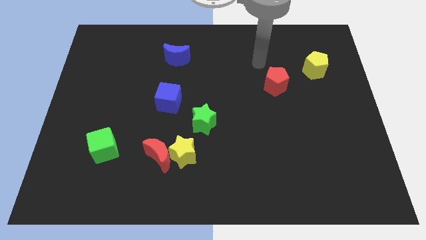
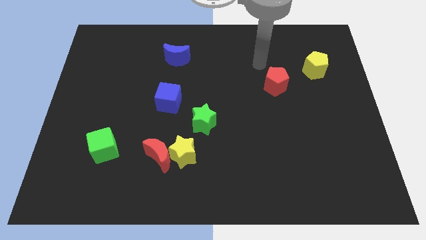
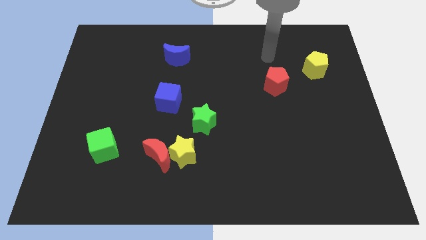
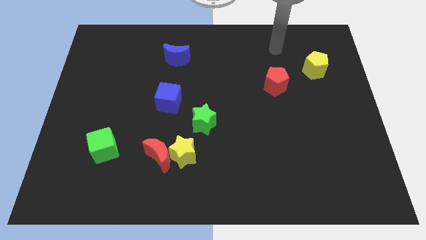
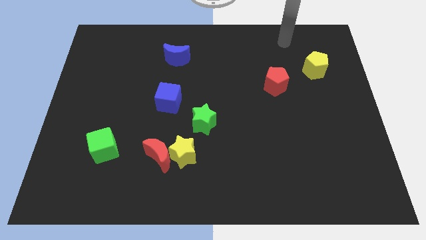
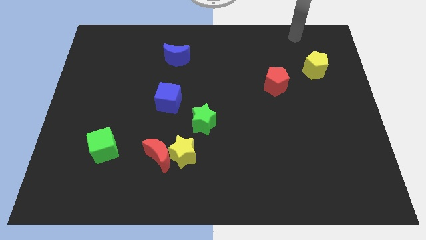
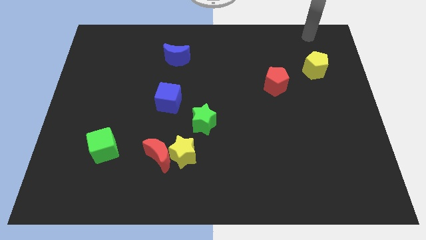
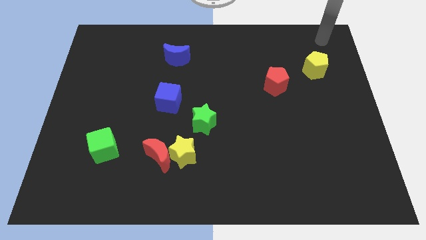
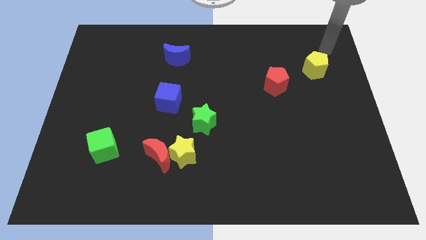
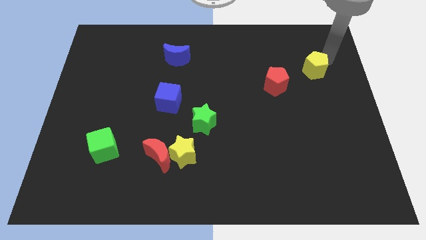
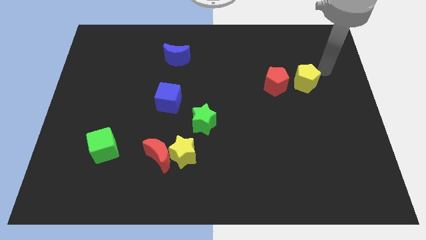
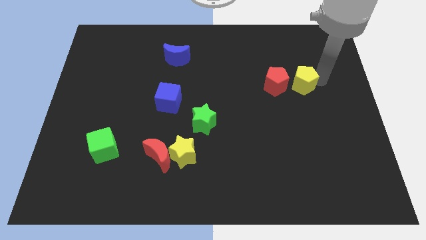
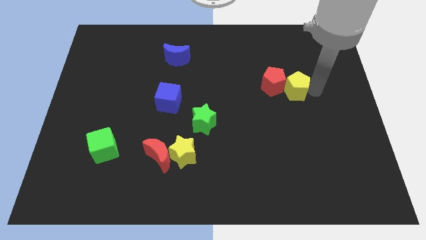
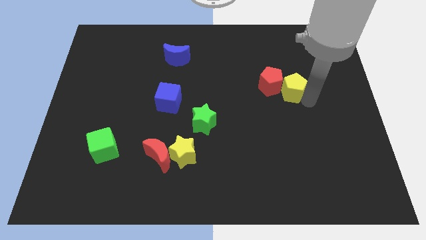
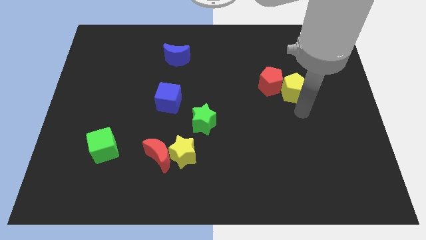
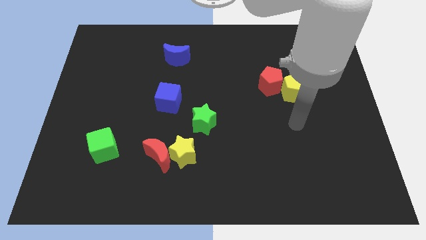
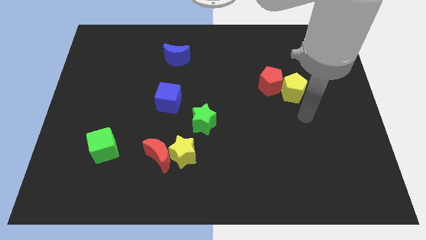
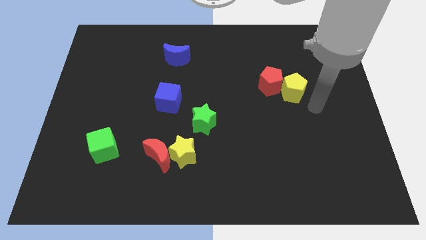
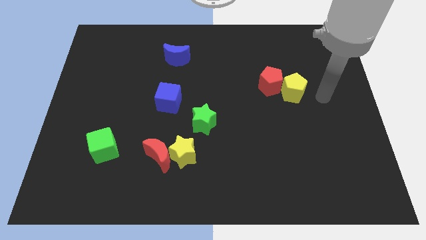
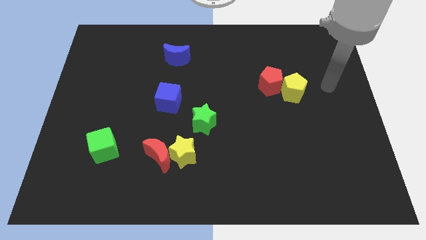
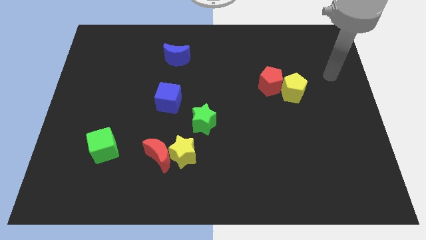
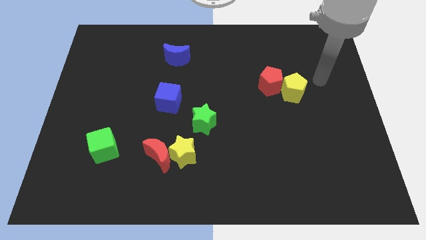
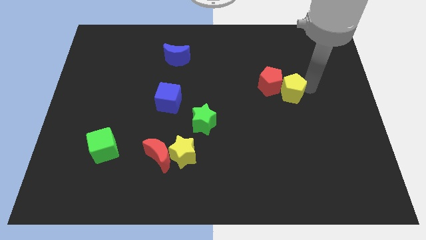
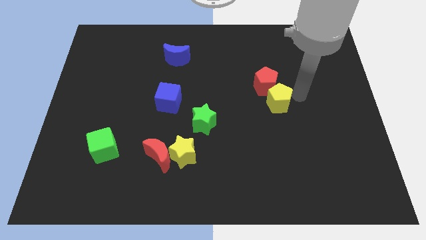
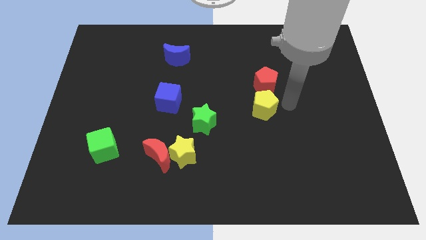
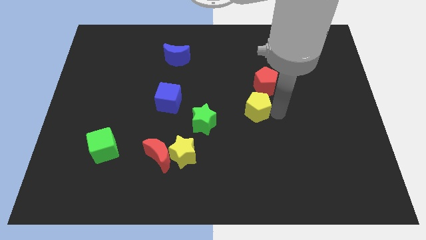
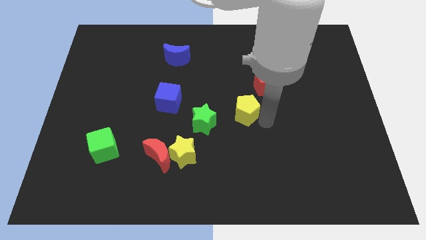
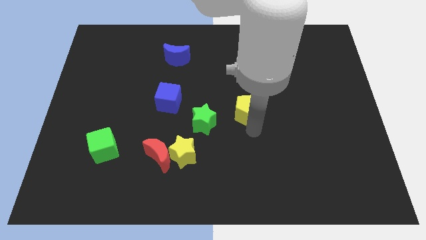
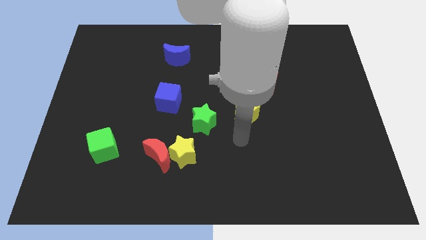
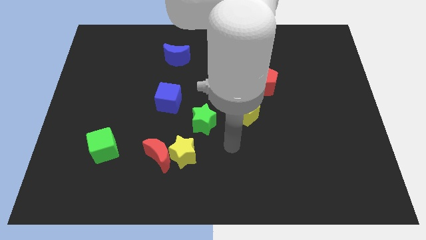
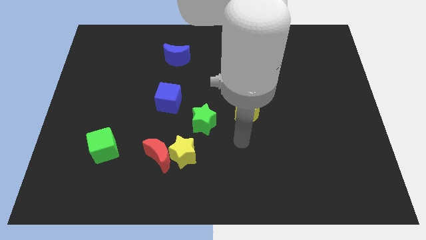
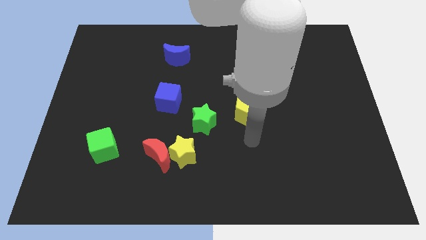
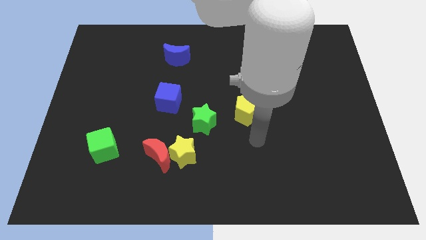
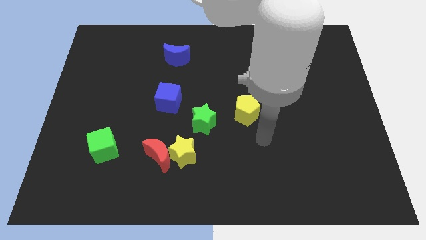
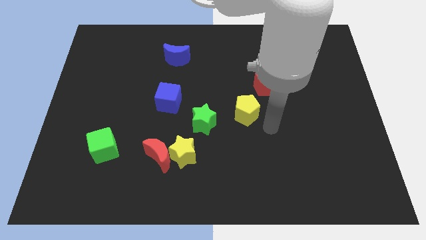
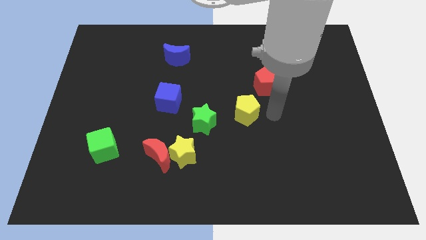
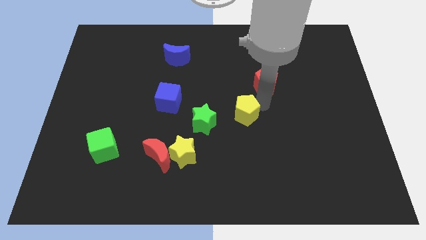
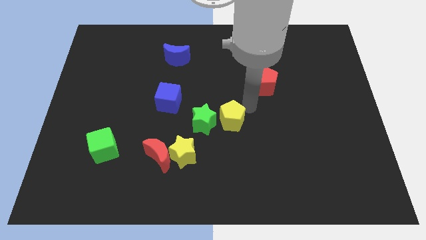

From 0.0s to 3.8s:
push the yellow pentagon to the bottom left of the red pentagon

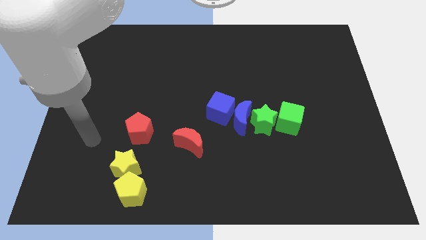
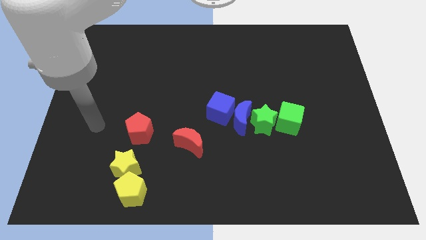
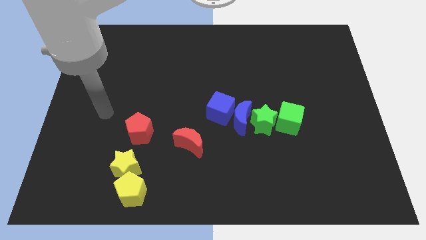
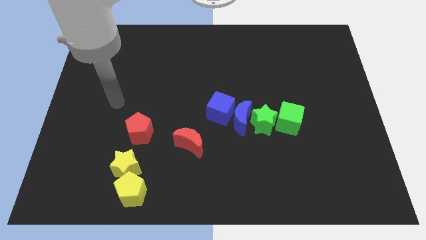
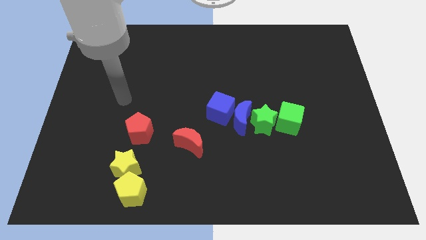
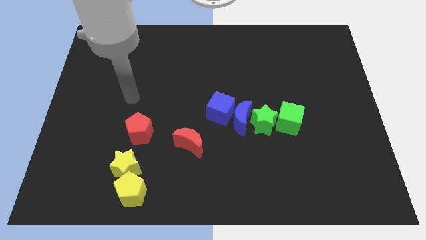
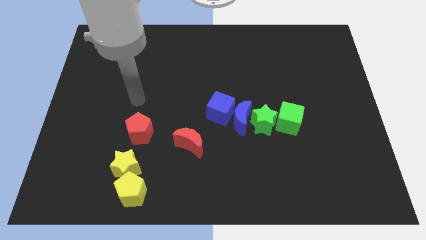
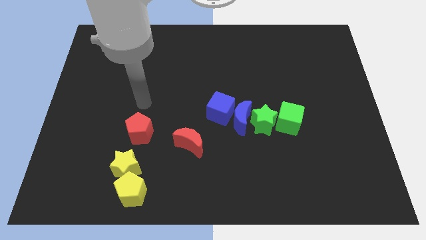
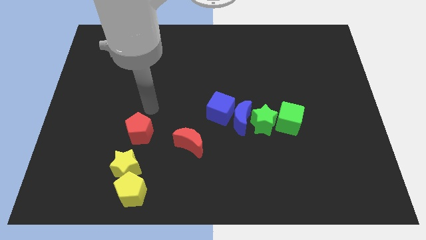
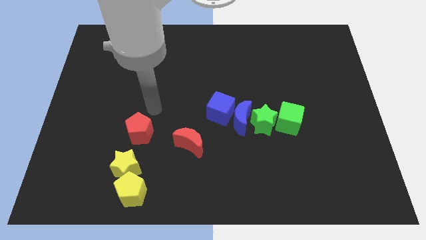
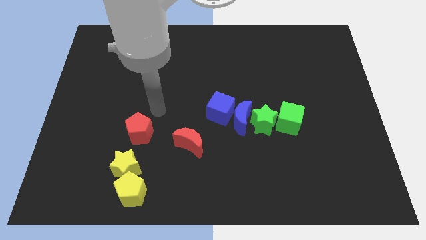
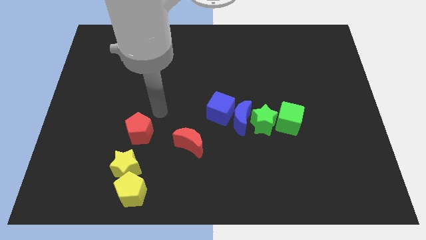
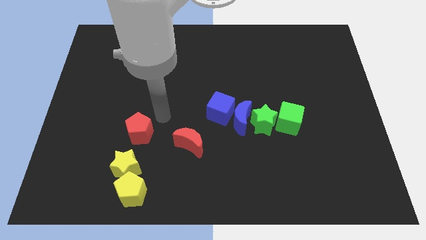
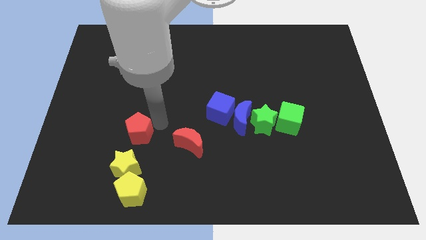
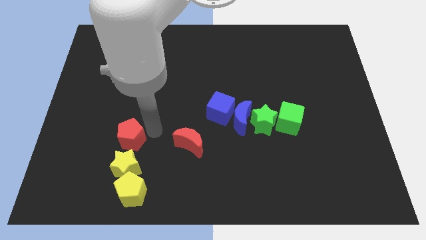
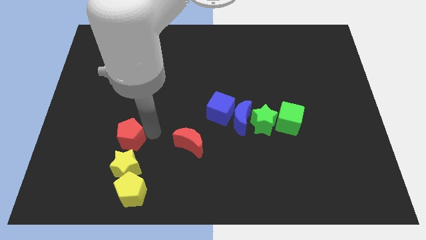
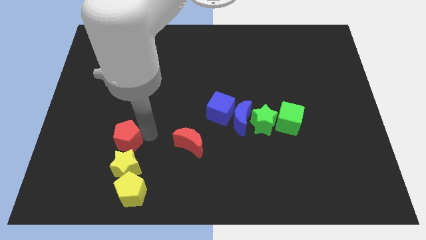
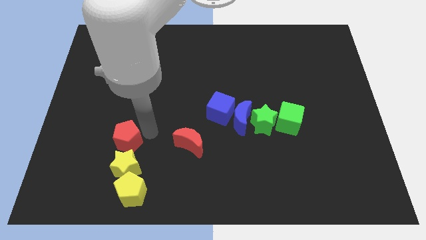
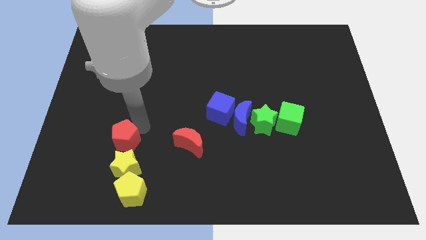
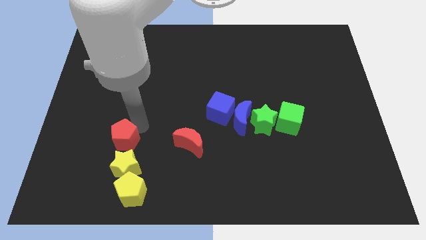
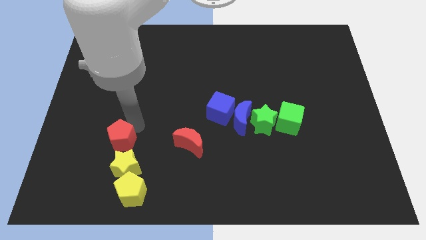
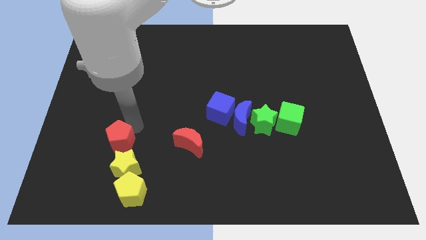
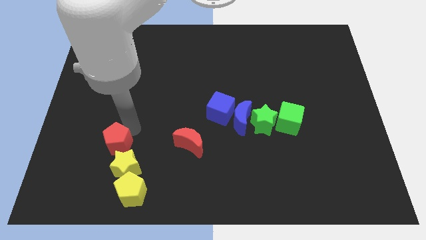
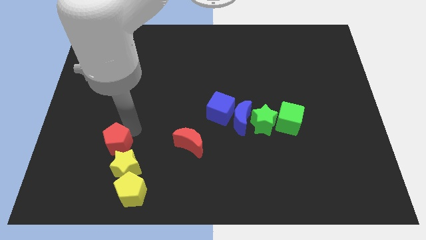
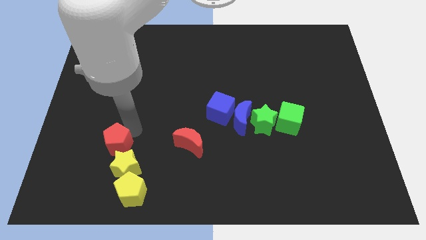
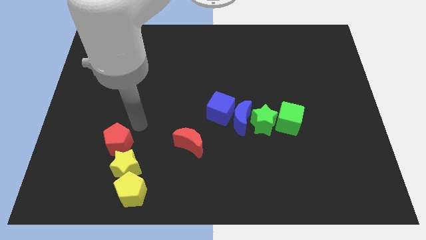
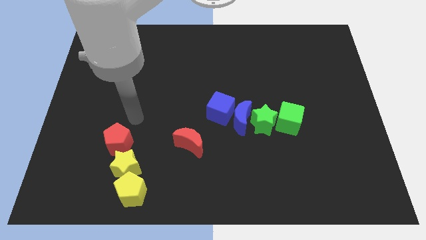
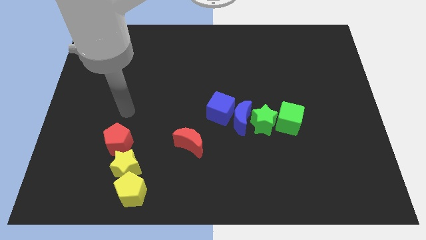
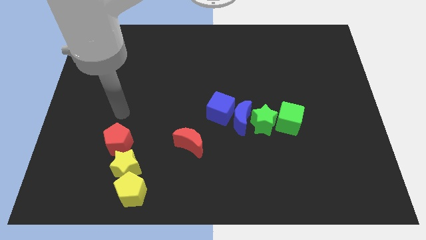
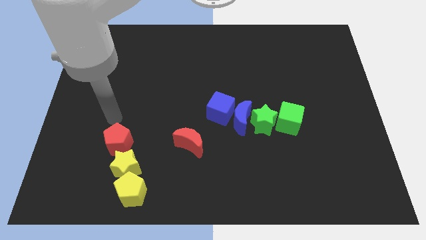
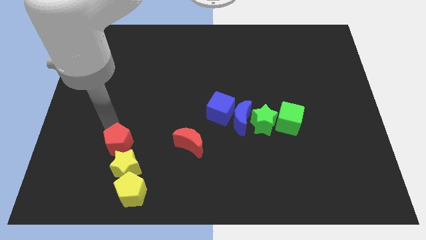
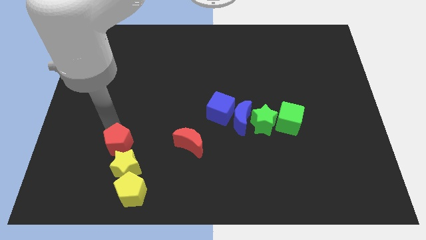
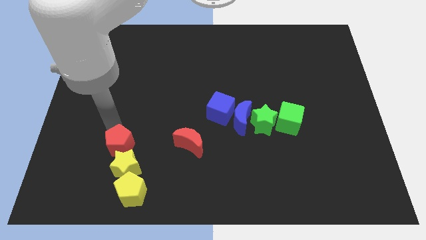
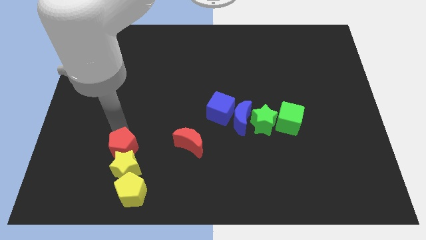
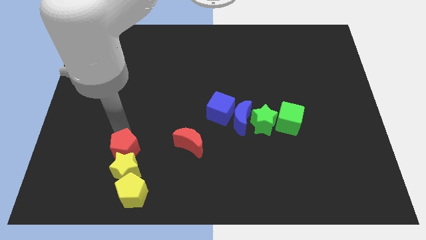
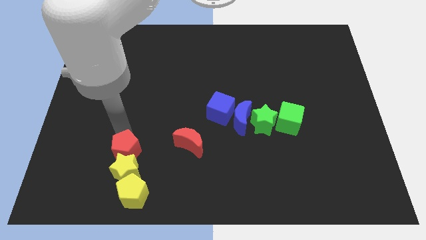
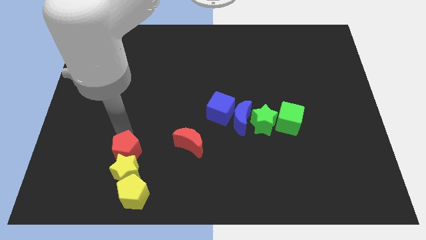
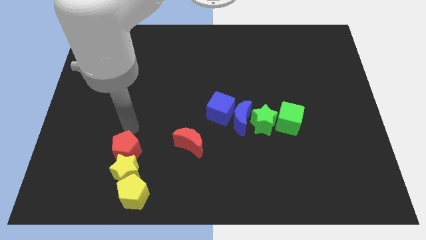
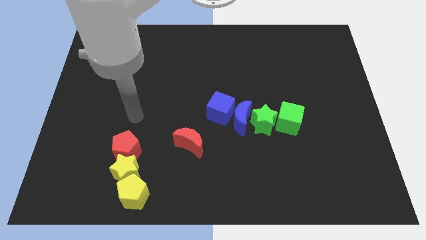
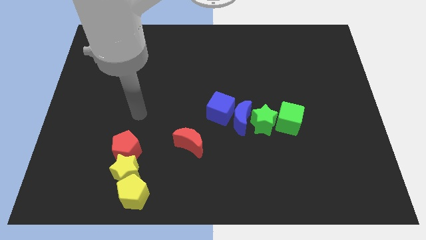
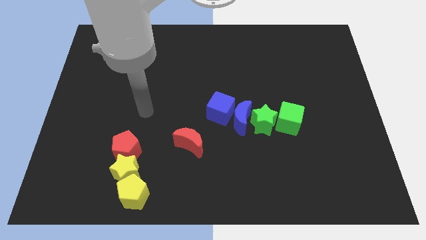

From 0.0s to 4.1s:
move the red pentagon into the yellow star

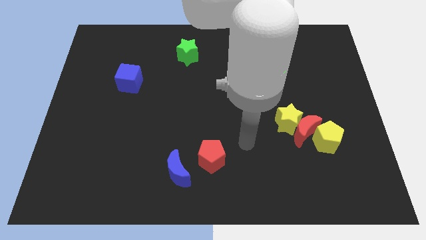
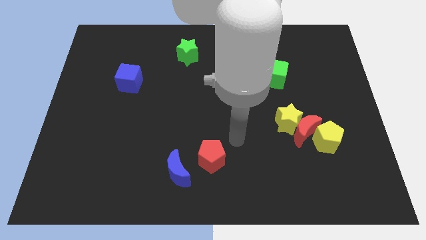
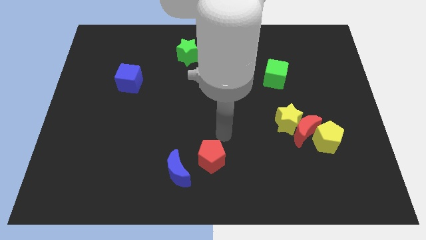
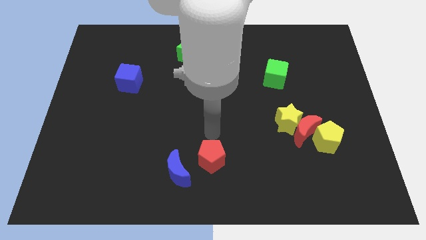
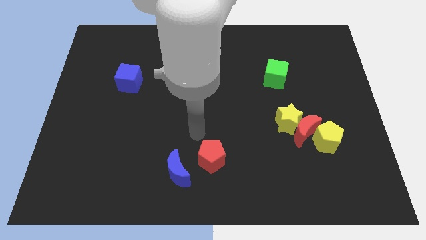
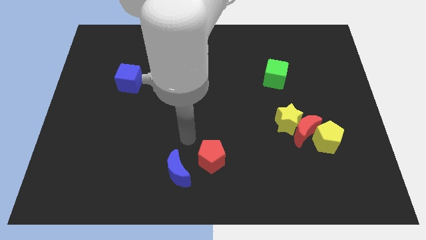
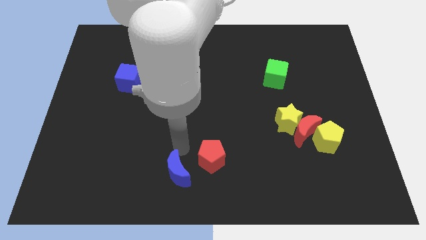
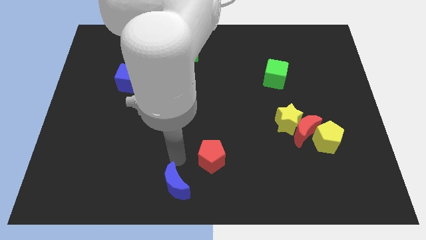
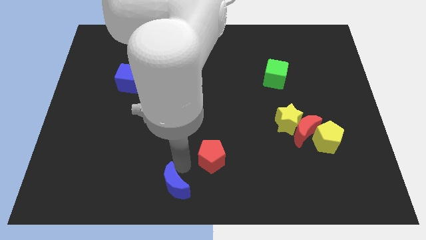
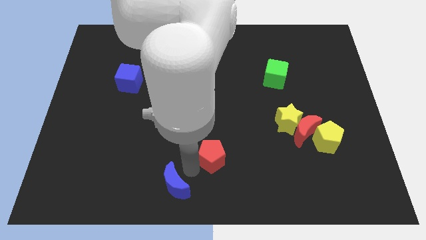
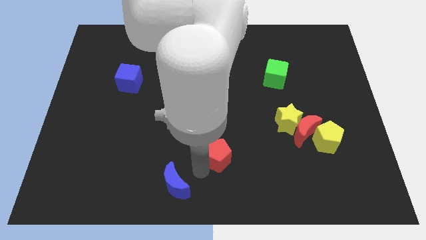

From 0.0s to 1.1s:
push the blue crescent slightly towards the bottom of board
